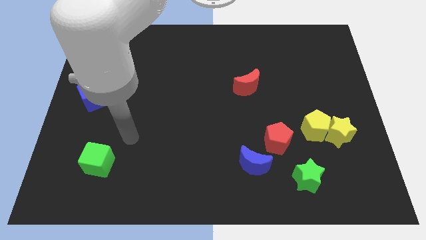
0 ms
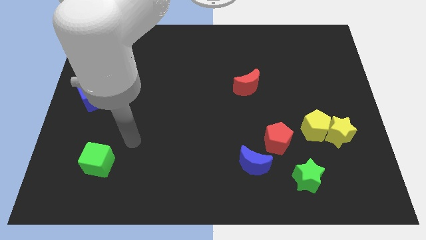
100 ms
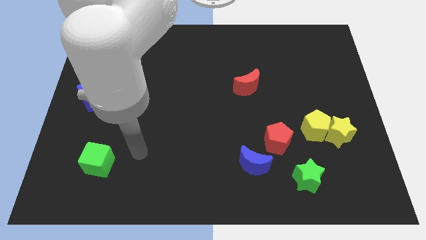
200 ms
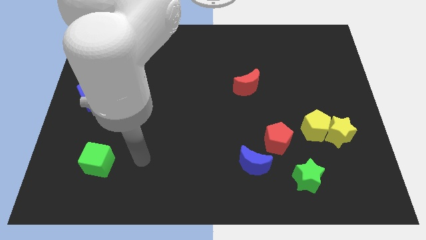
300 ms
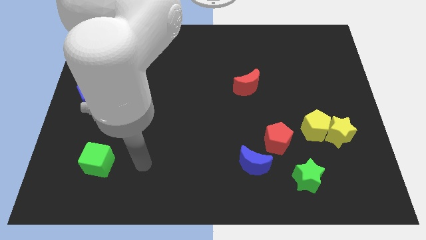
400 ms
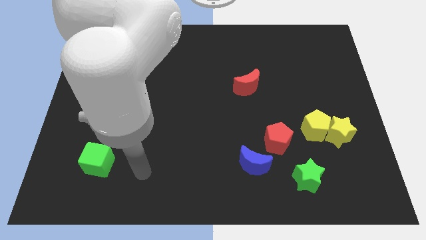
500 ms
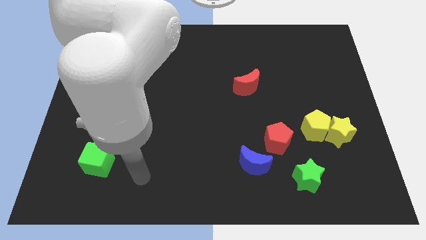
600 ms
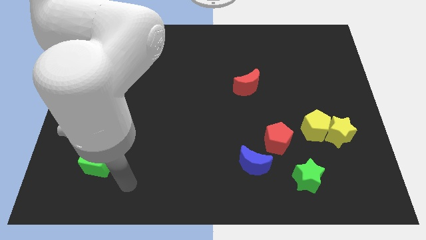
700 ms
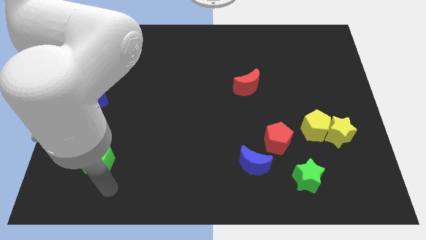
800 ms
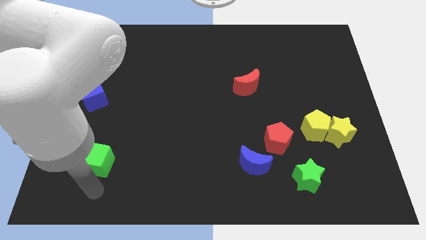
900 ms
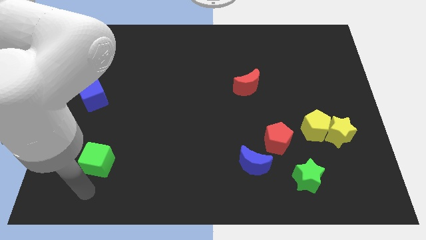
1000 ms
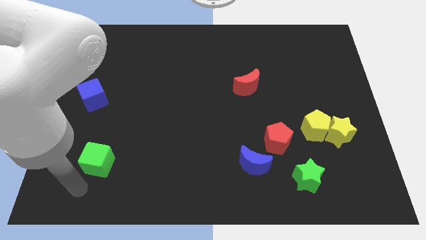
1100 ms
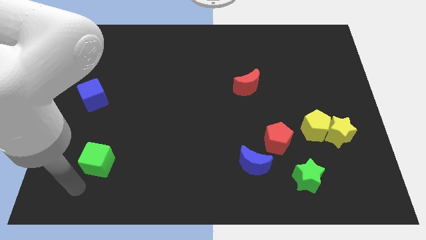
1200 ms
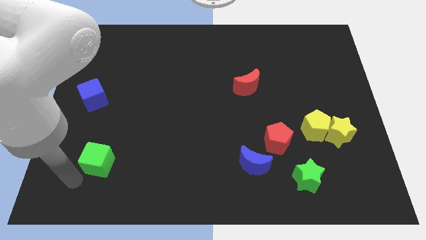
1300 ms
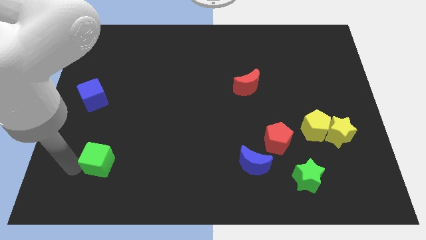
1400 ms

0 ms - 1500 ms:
place your arm to the bottom left side of the green block

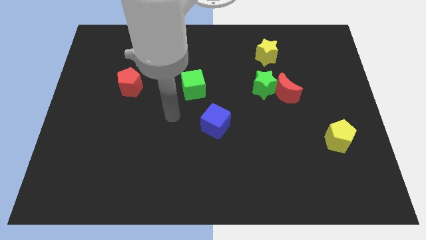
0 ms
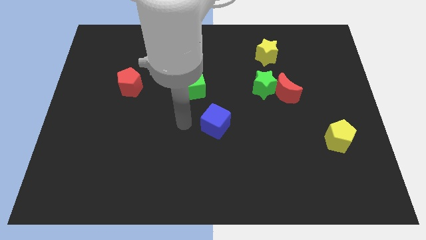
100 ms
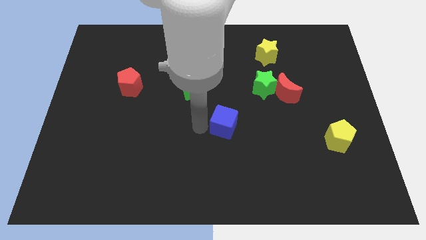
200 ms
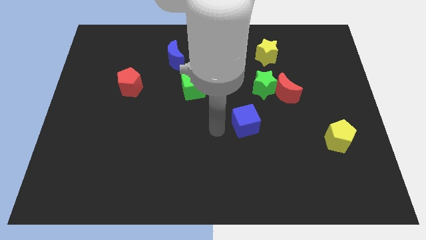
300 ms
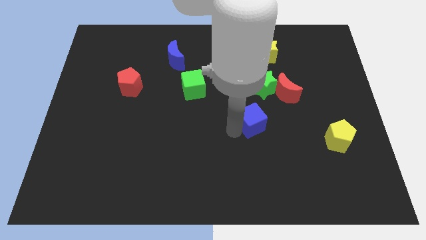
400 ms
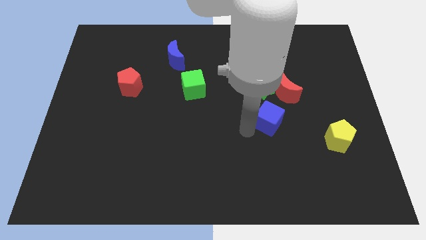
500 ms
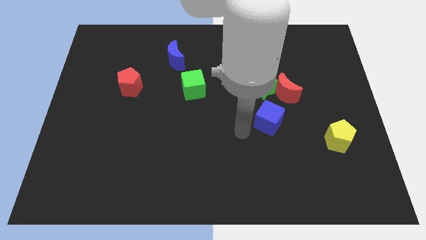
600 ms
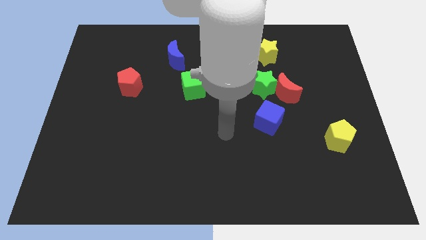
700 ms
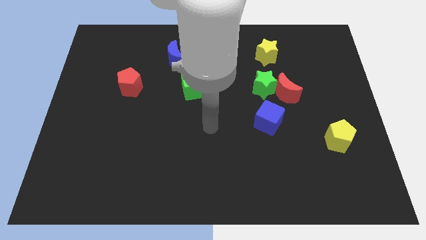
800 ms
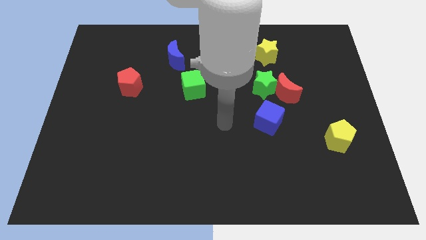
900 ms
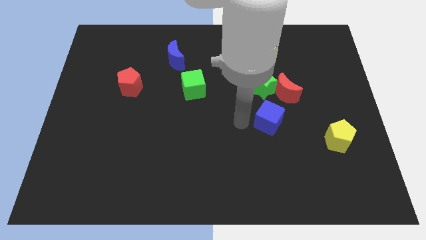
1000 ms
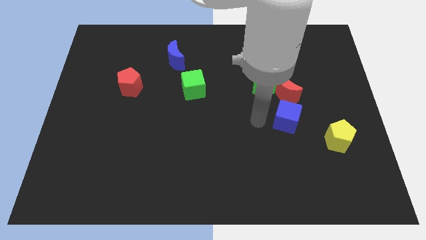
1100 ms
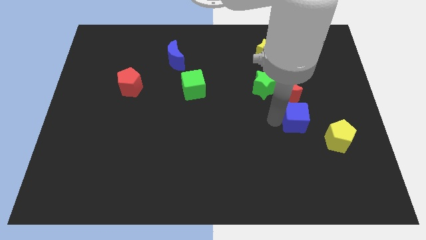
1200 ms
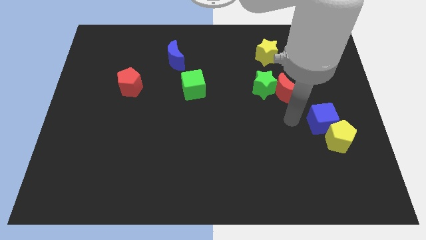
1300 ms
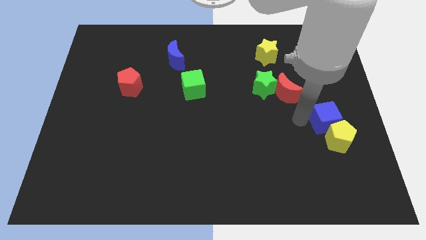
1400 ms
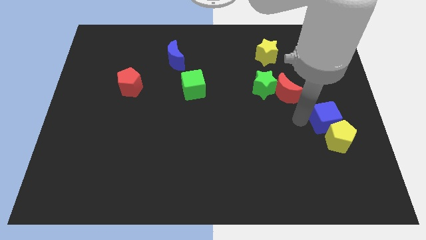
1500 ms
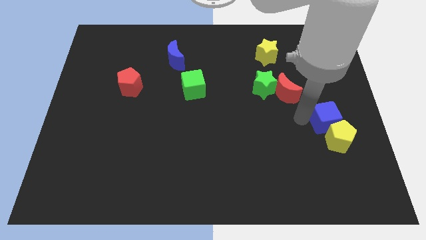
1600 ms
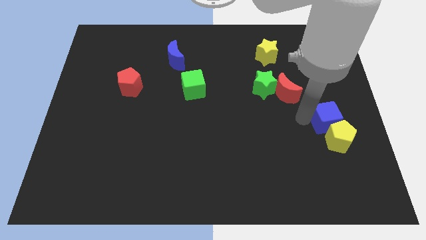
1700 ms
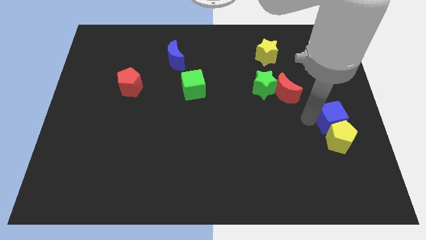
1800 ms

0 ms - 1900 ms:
place the blue cube into yellow pentagon

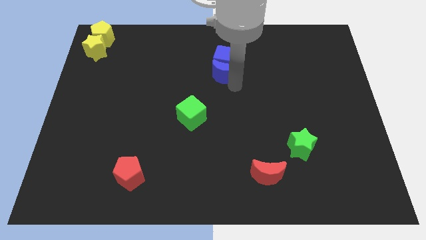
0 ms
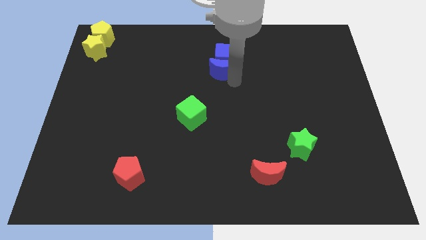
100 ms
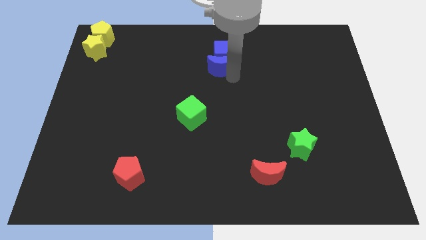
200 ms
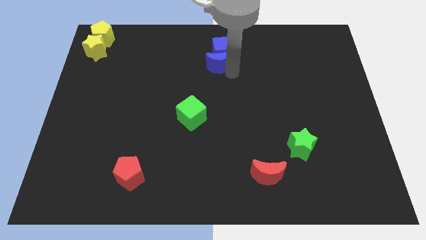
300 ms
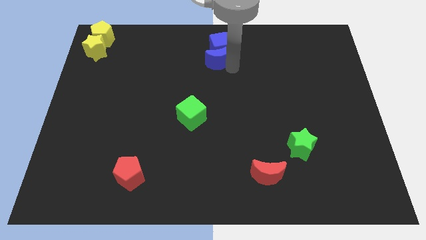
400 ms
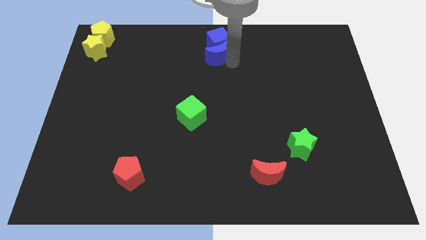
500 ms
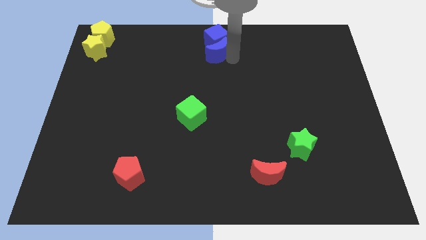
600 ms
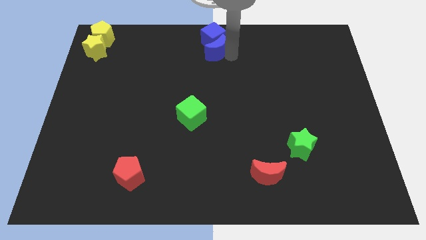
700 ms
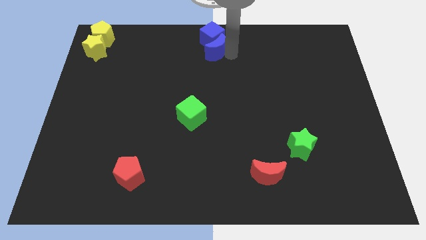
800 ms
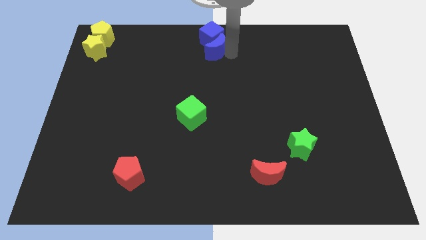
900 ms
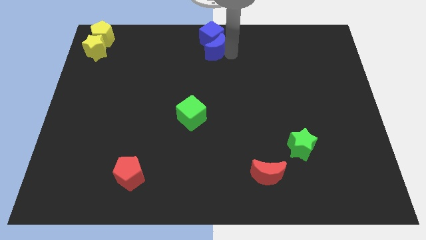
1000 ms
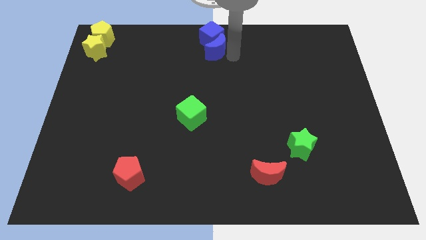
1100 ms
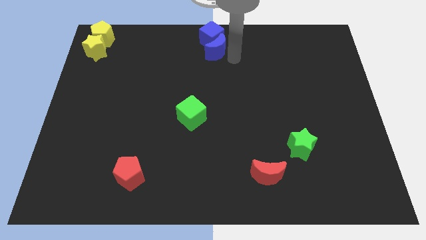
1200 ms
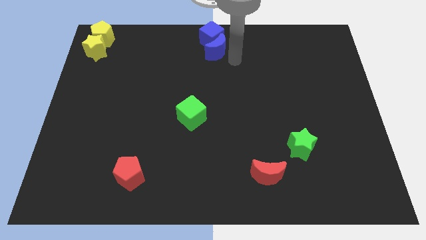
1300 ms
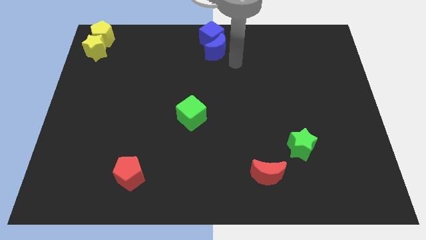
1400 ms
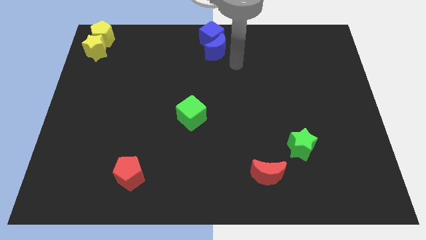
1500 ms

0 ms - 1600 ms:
push blue crescent into the blue cube

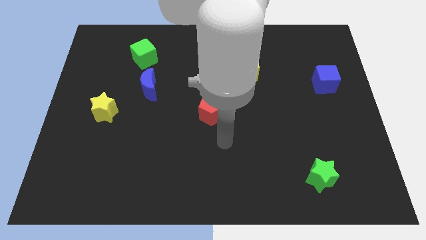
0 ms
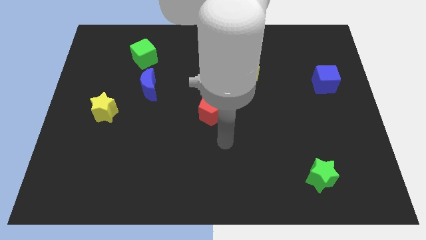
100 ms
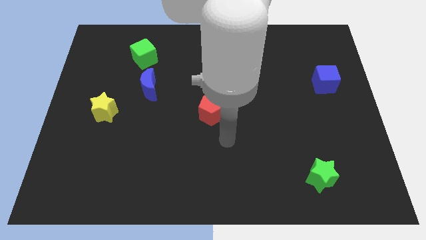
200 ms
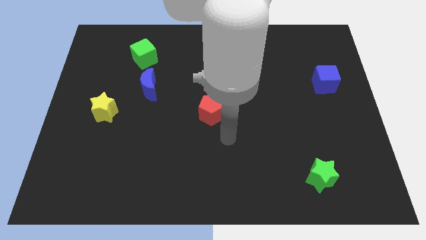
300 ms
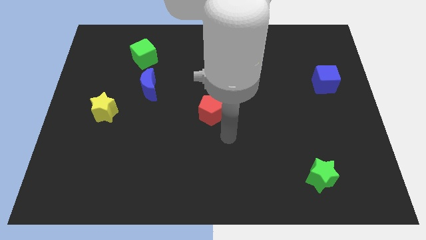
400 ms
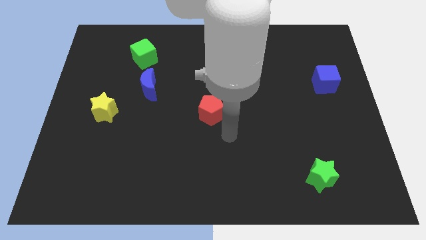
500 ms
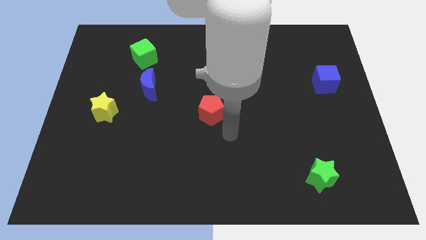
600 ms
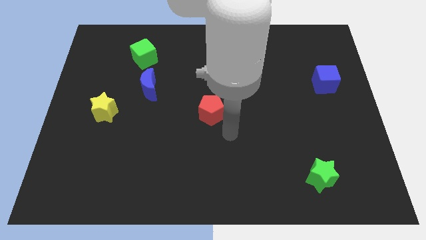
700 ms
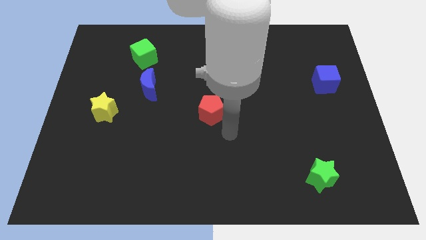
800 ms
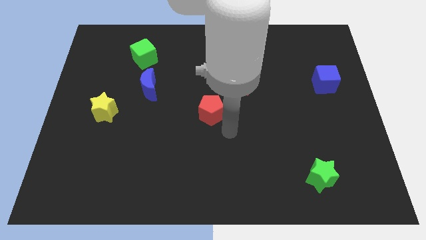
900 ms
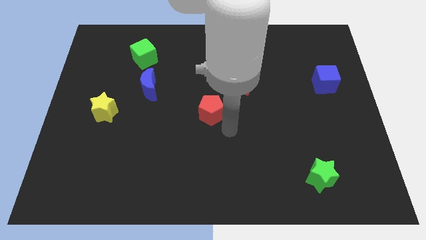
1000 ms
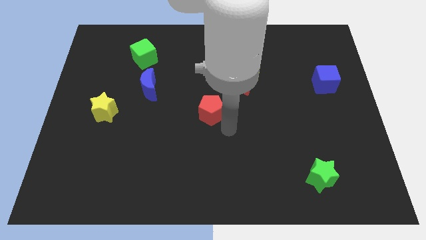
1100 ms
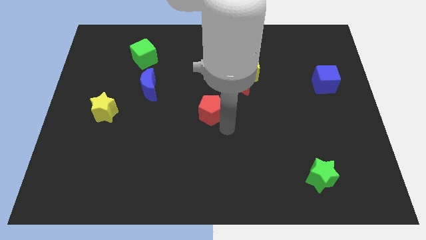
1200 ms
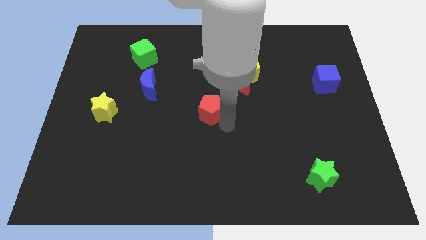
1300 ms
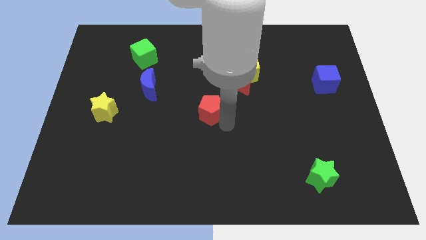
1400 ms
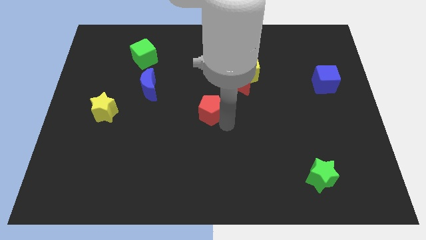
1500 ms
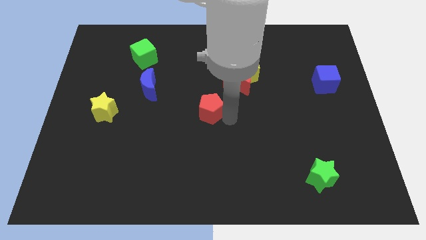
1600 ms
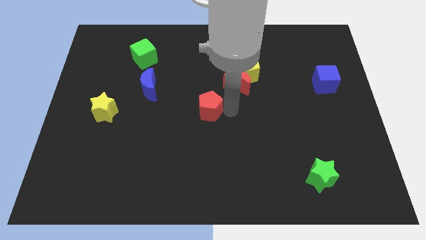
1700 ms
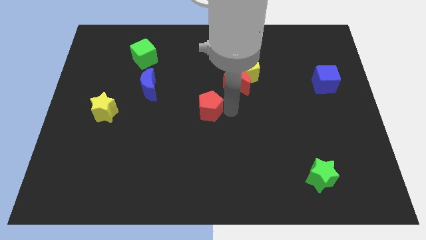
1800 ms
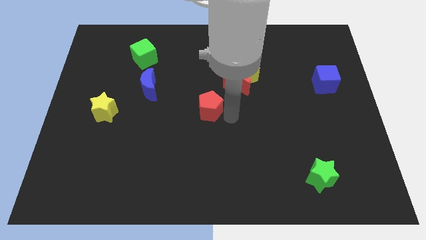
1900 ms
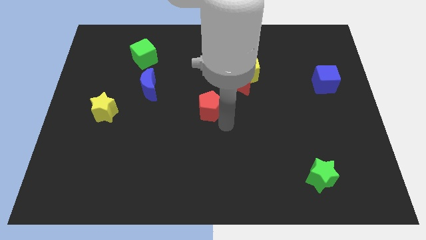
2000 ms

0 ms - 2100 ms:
slightly push red crescent to the center of the board

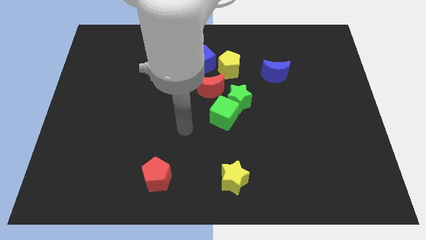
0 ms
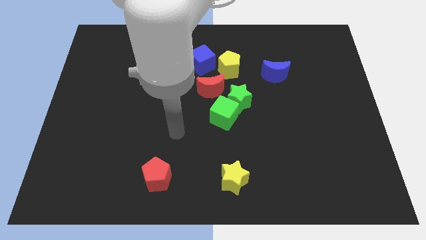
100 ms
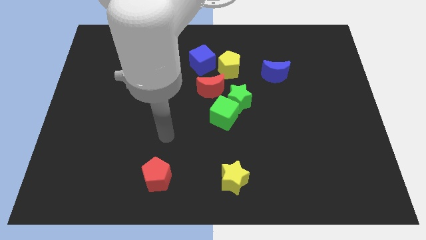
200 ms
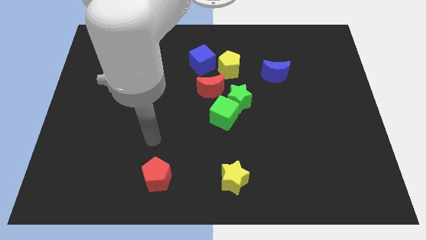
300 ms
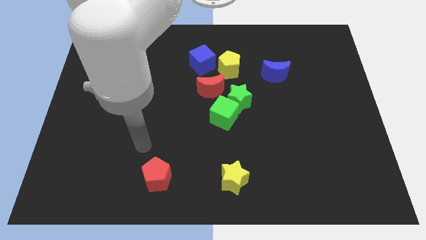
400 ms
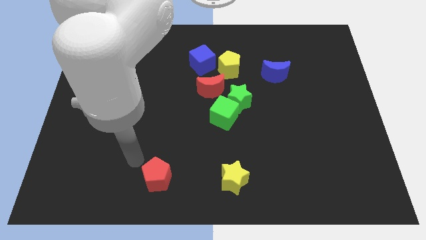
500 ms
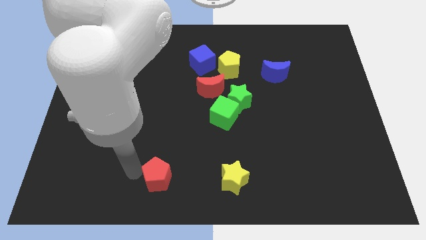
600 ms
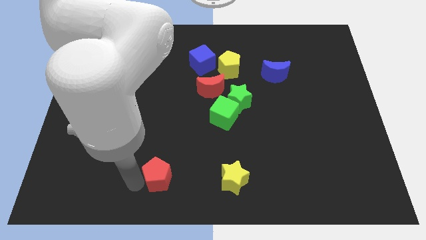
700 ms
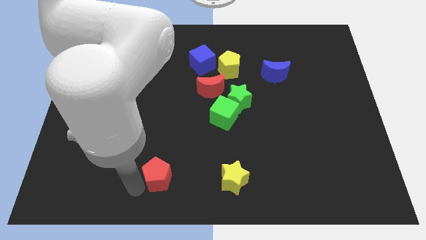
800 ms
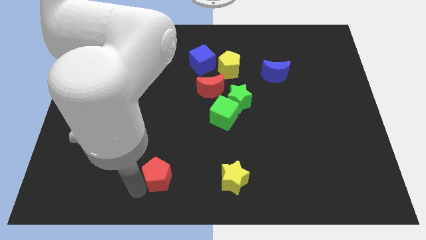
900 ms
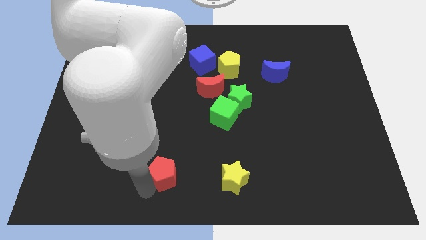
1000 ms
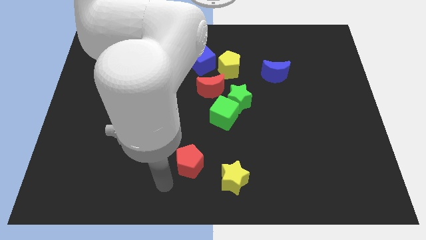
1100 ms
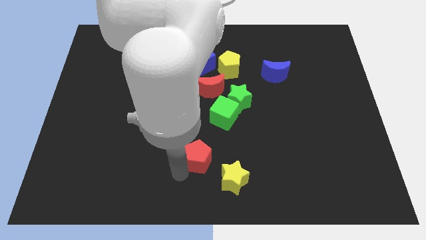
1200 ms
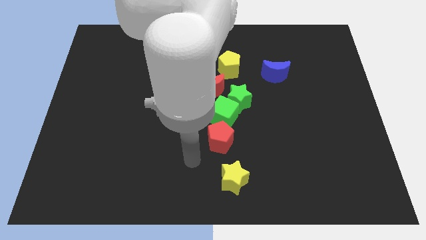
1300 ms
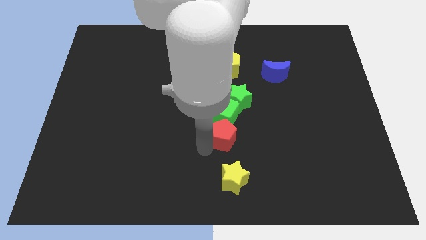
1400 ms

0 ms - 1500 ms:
put the red pentagon below the green cube

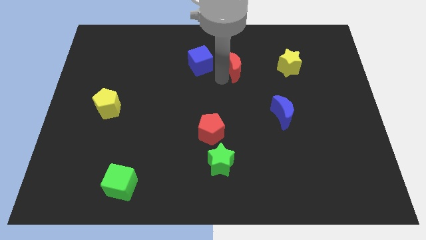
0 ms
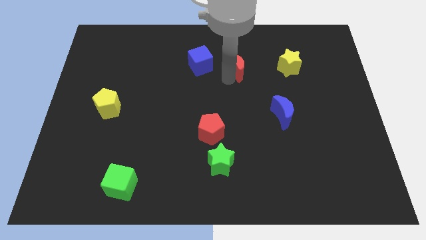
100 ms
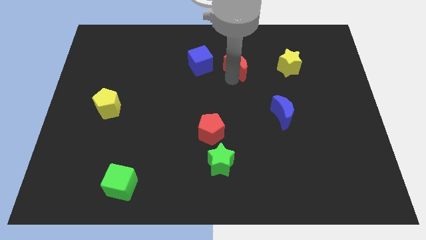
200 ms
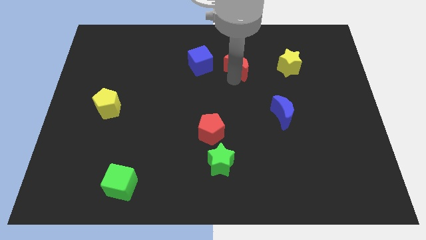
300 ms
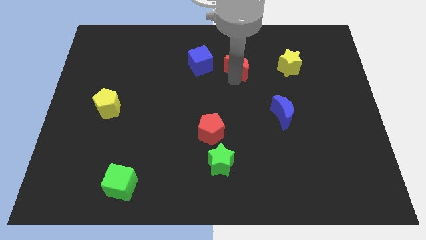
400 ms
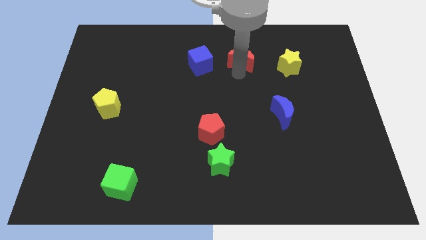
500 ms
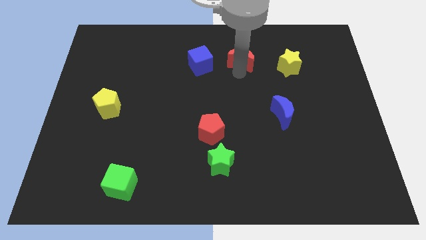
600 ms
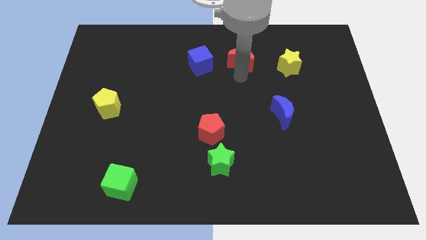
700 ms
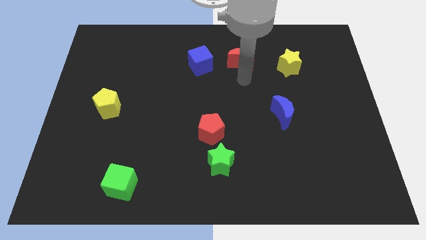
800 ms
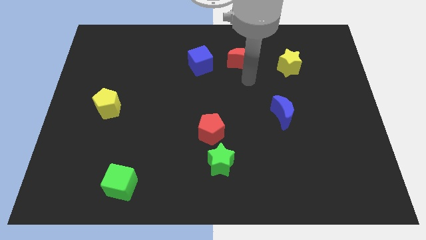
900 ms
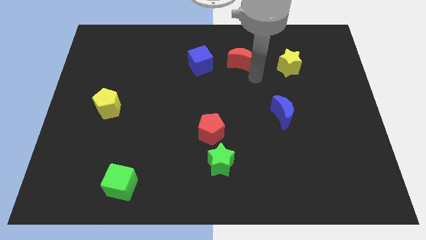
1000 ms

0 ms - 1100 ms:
move red crescent right side of blue cube
